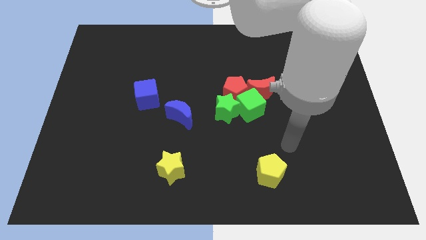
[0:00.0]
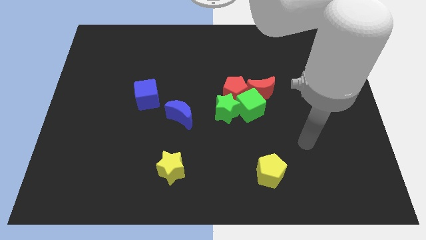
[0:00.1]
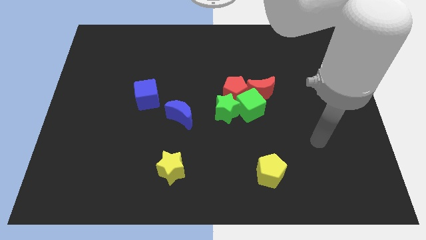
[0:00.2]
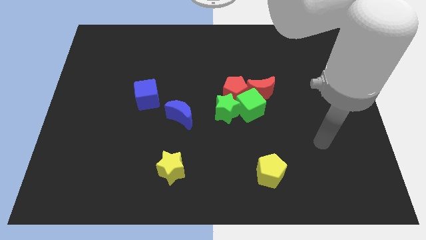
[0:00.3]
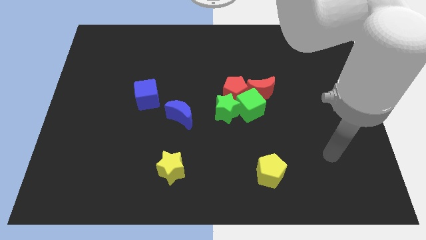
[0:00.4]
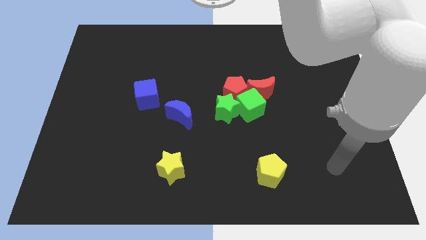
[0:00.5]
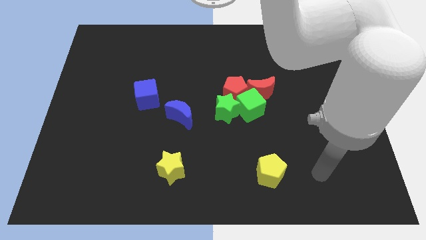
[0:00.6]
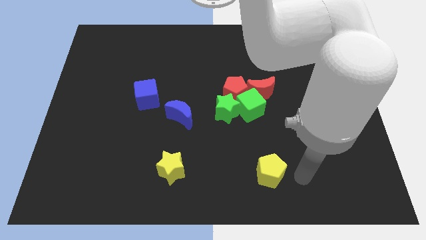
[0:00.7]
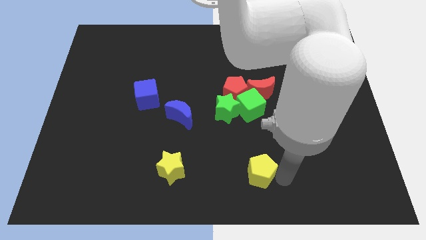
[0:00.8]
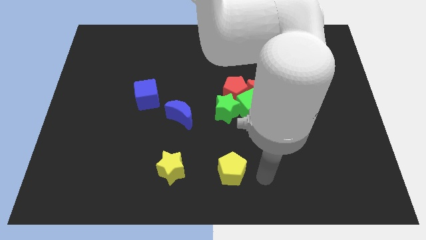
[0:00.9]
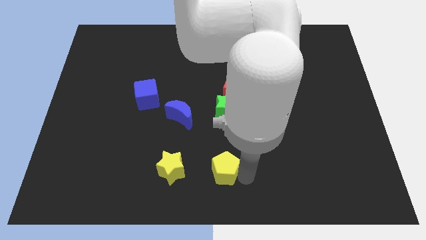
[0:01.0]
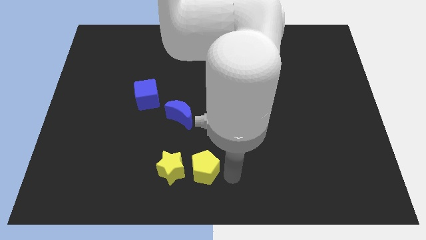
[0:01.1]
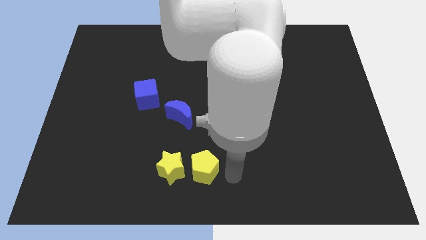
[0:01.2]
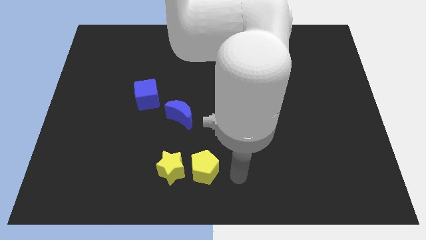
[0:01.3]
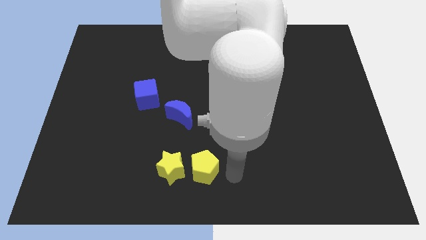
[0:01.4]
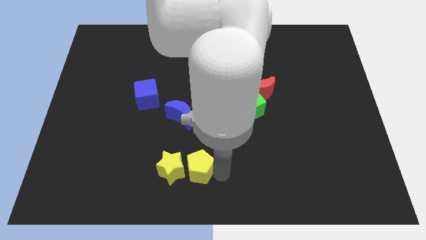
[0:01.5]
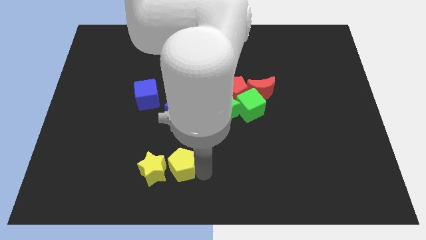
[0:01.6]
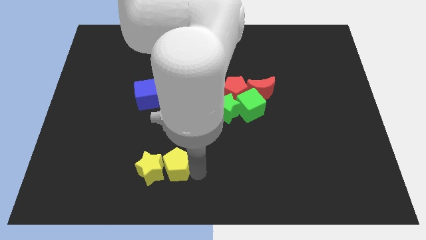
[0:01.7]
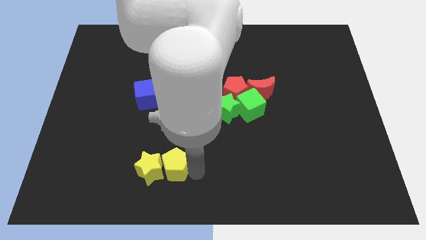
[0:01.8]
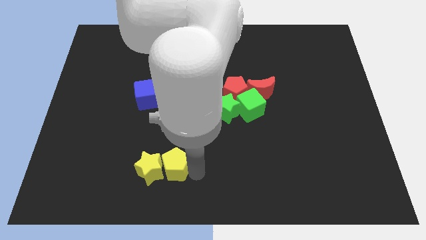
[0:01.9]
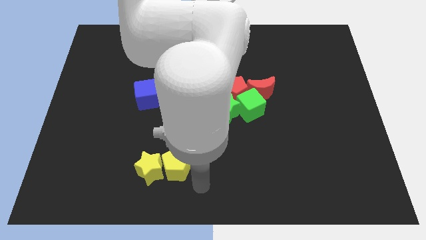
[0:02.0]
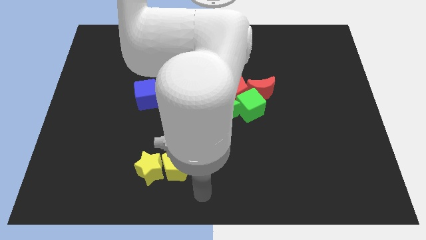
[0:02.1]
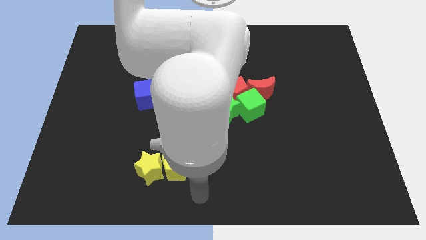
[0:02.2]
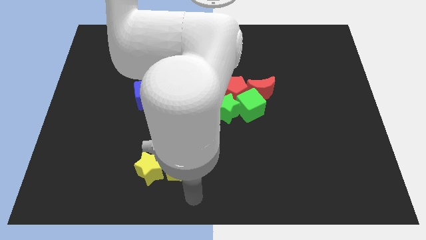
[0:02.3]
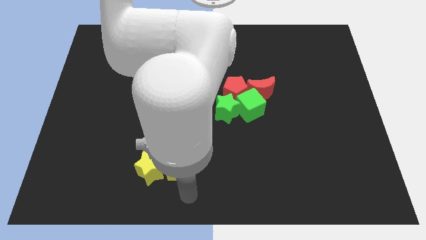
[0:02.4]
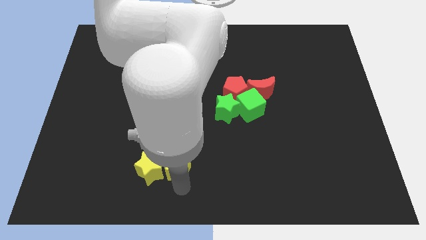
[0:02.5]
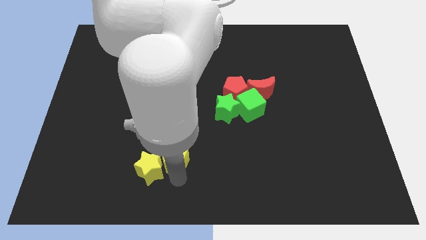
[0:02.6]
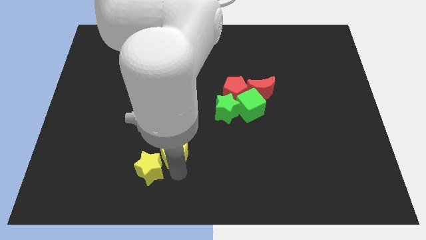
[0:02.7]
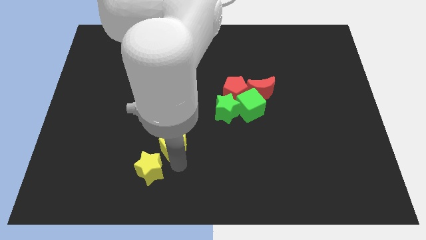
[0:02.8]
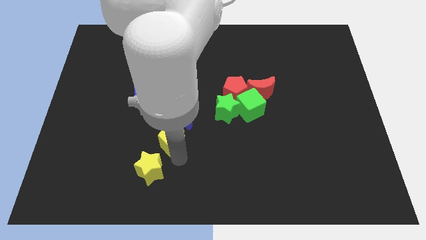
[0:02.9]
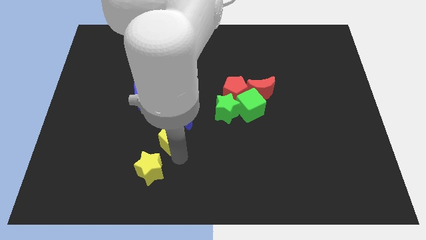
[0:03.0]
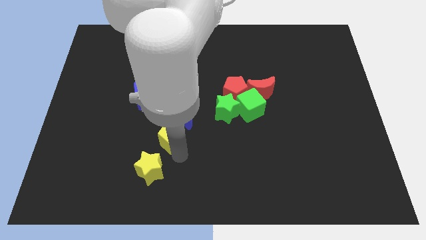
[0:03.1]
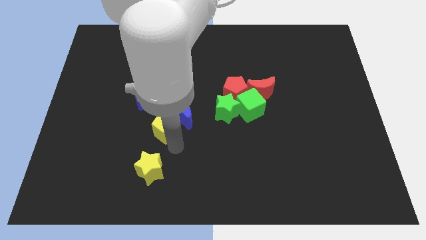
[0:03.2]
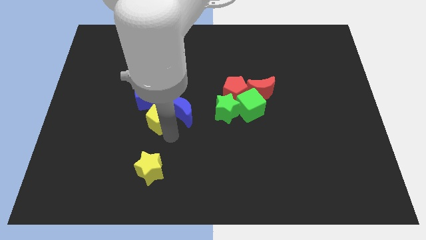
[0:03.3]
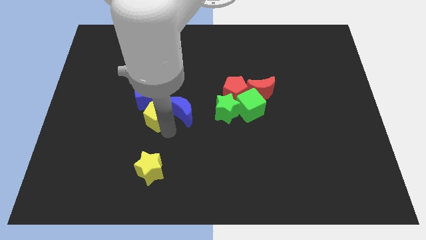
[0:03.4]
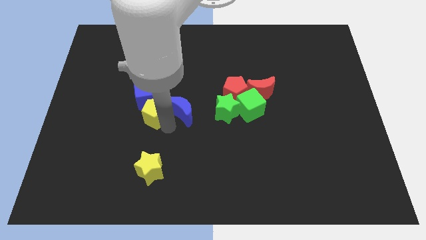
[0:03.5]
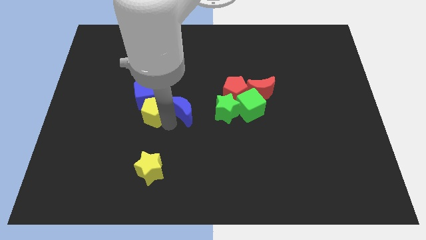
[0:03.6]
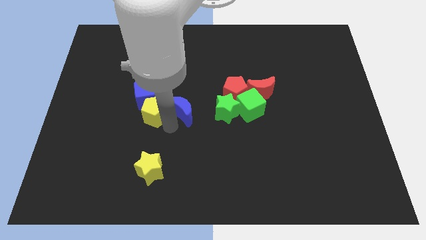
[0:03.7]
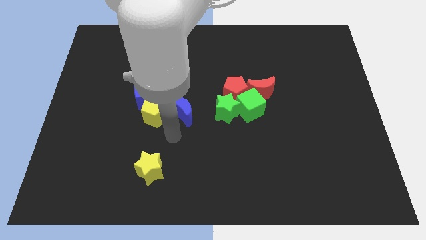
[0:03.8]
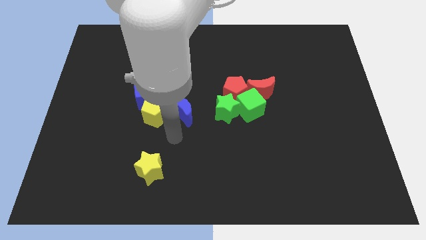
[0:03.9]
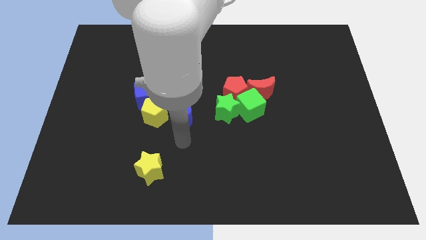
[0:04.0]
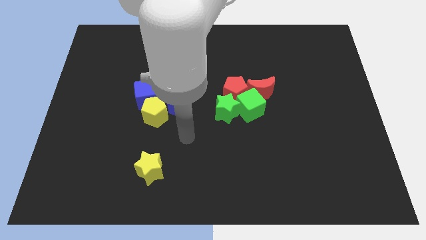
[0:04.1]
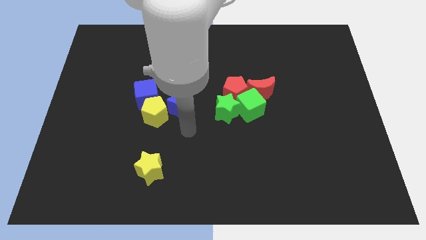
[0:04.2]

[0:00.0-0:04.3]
move the yellow pentagon into the blue cube

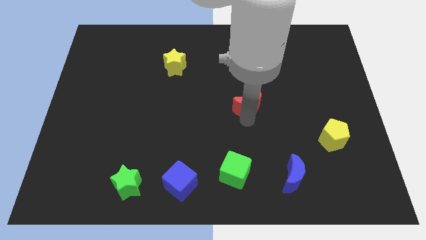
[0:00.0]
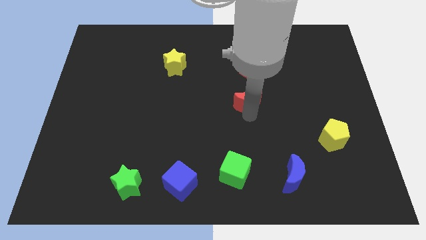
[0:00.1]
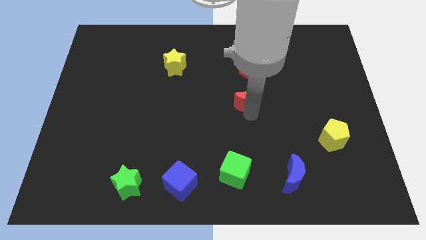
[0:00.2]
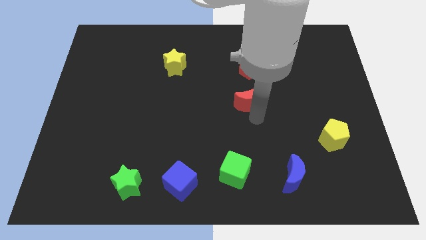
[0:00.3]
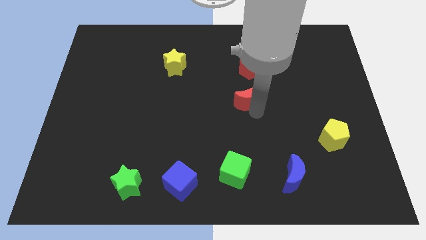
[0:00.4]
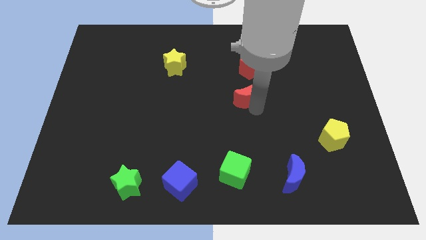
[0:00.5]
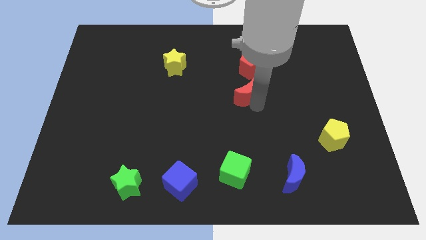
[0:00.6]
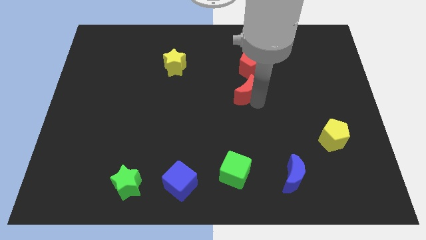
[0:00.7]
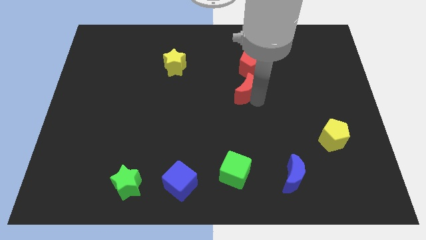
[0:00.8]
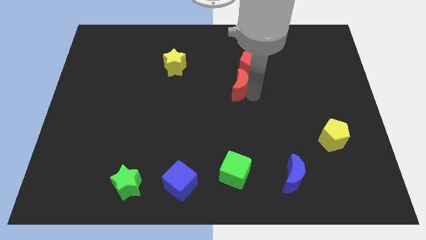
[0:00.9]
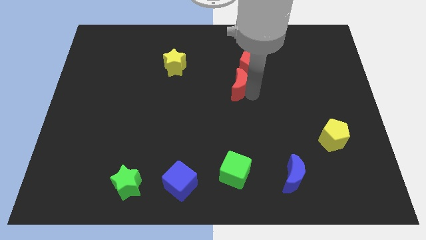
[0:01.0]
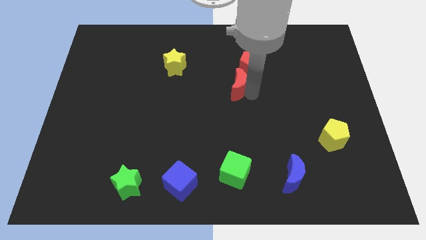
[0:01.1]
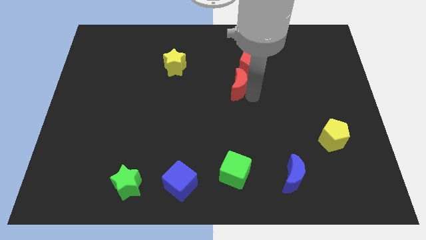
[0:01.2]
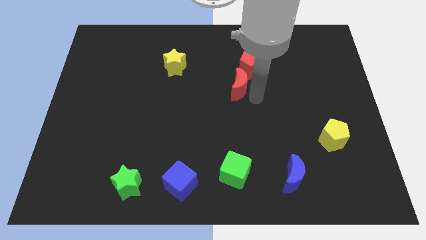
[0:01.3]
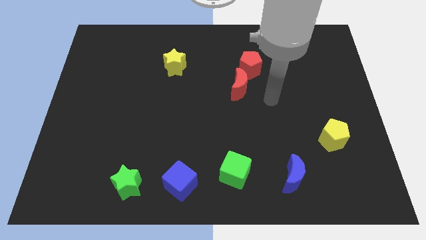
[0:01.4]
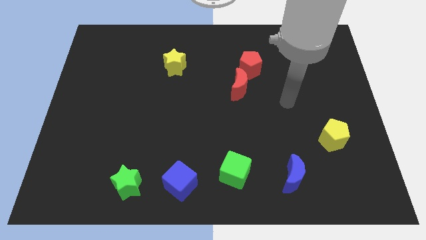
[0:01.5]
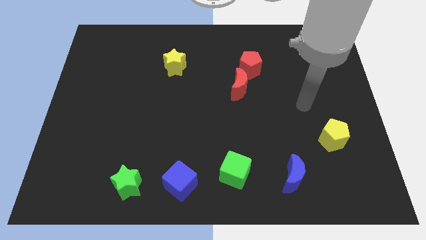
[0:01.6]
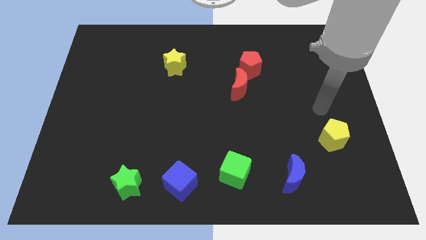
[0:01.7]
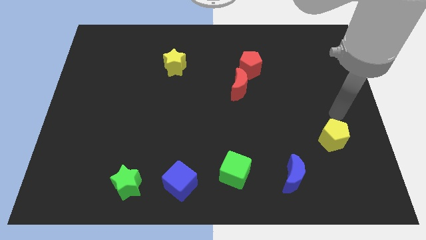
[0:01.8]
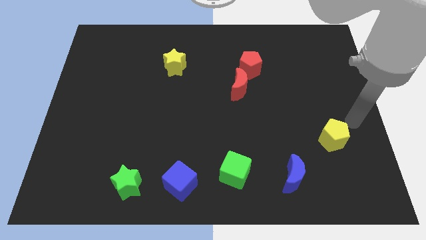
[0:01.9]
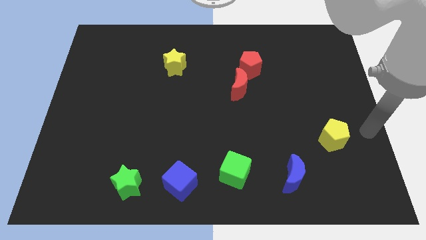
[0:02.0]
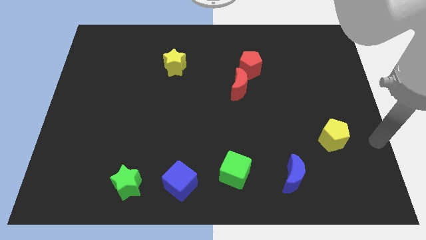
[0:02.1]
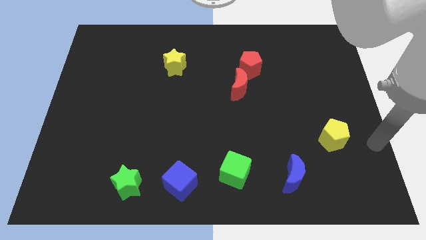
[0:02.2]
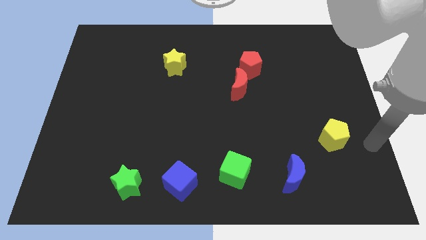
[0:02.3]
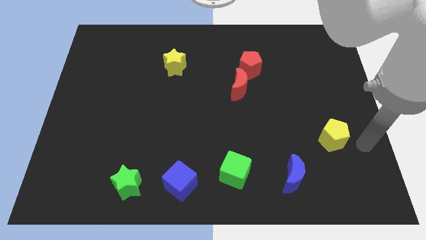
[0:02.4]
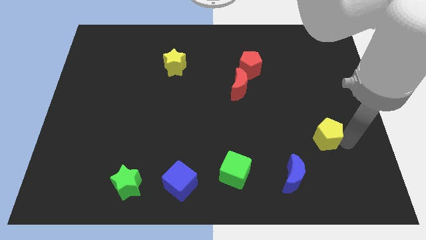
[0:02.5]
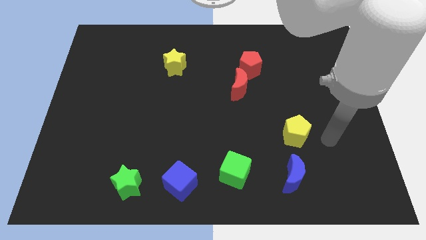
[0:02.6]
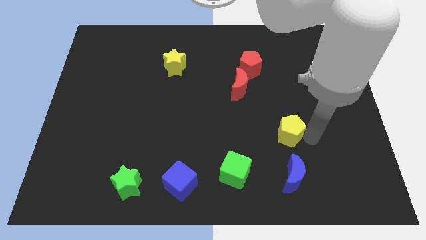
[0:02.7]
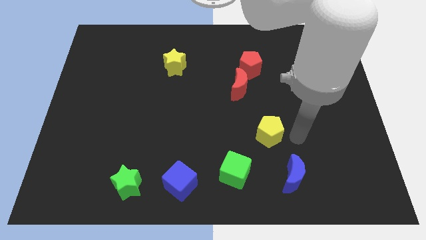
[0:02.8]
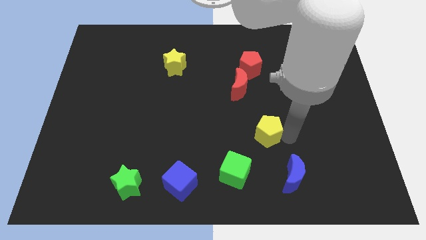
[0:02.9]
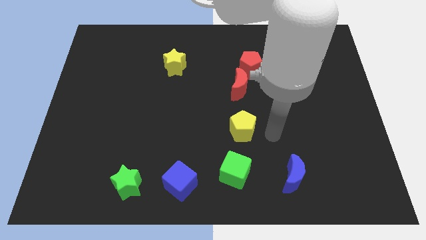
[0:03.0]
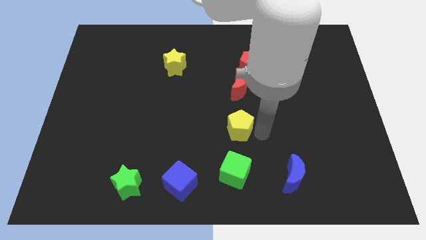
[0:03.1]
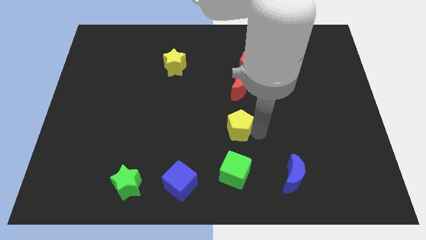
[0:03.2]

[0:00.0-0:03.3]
push the yellow pentagon in between the red moon and the green cube

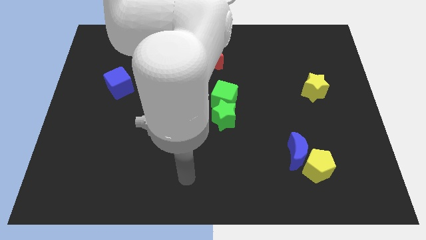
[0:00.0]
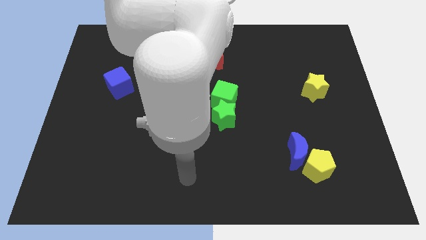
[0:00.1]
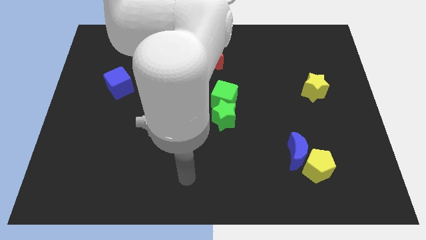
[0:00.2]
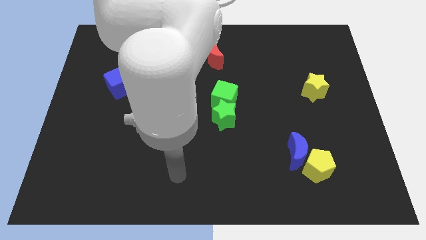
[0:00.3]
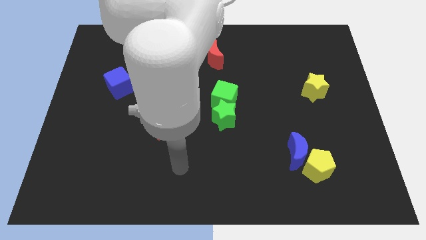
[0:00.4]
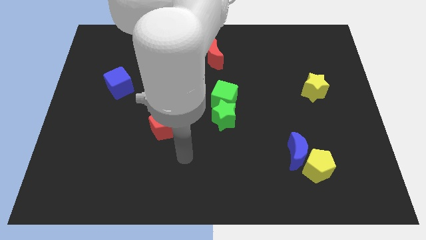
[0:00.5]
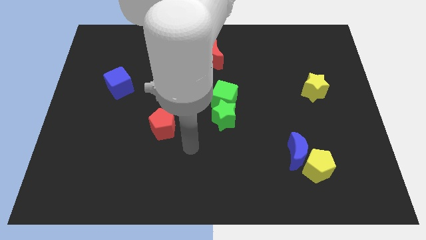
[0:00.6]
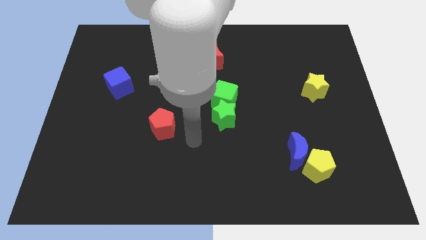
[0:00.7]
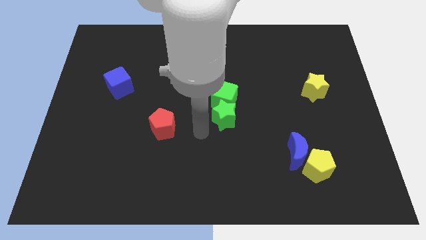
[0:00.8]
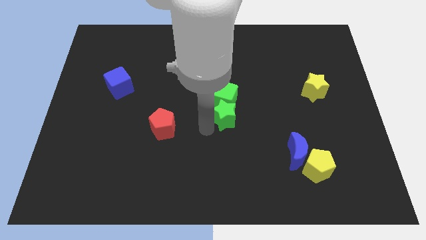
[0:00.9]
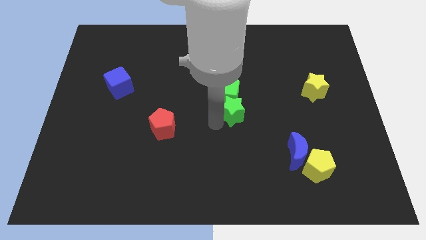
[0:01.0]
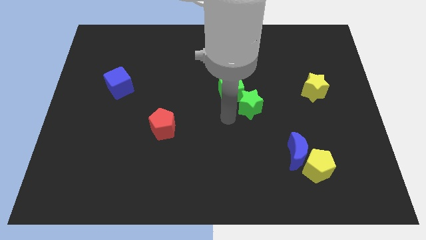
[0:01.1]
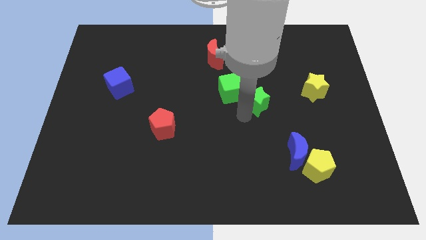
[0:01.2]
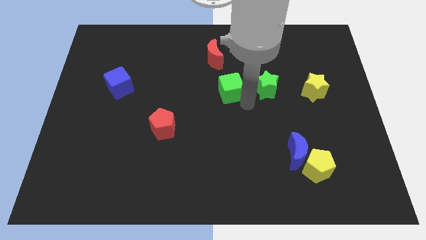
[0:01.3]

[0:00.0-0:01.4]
separate the green star and green cube
